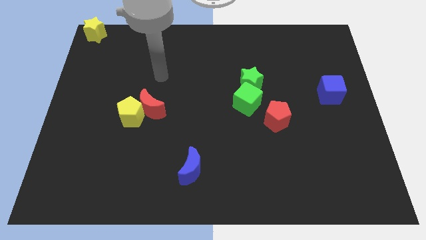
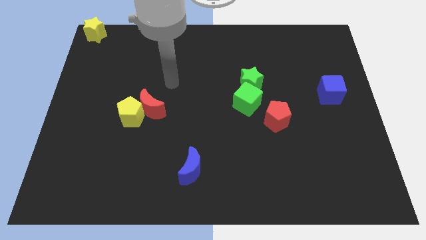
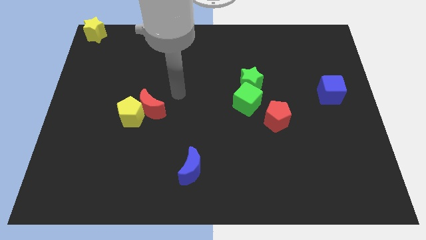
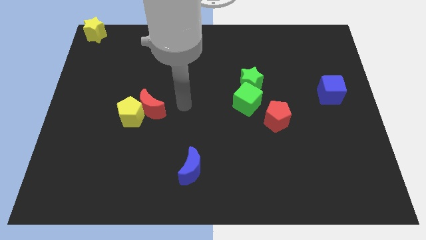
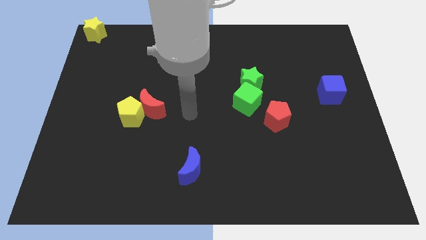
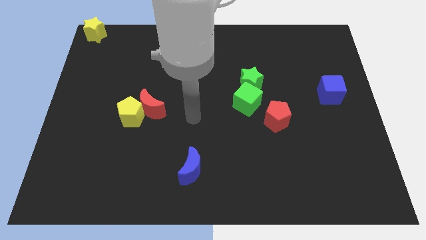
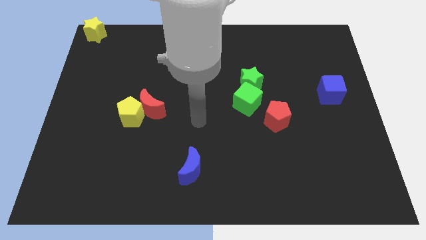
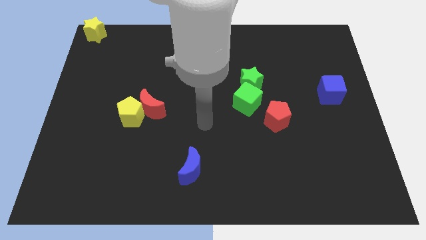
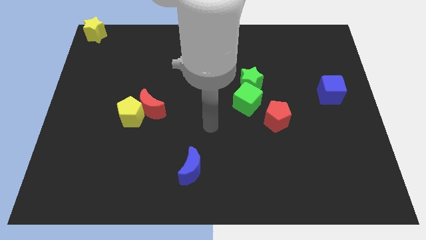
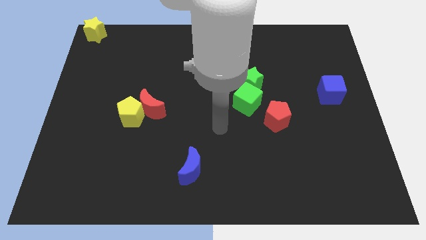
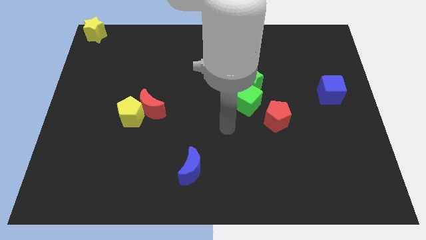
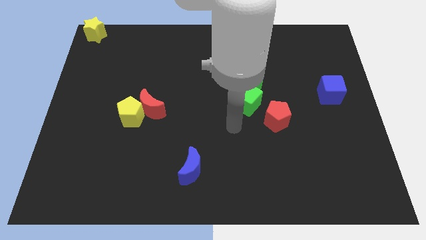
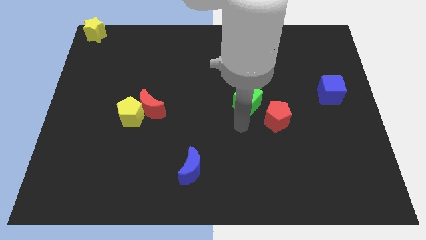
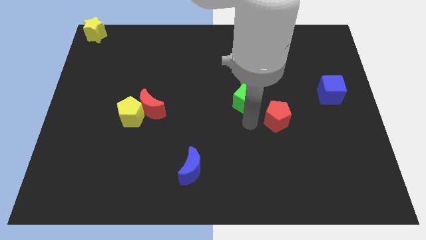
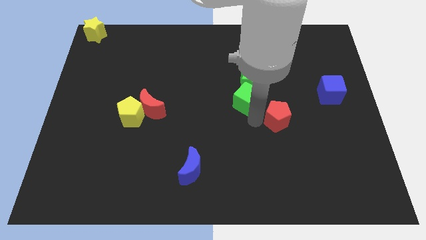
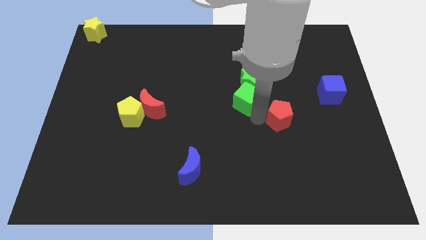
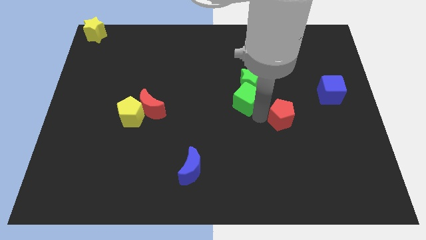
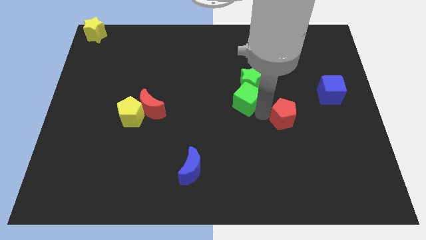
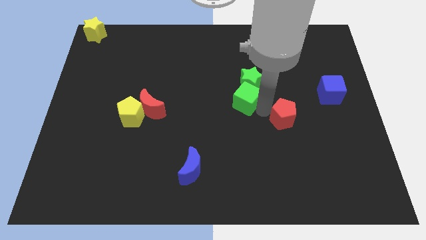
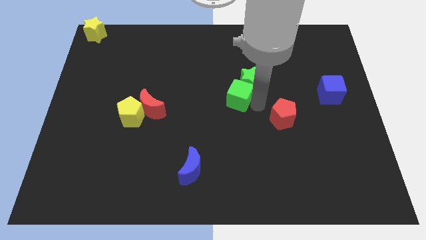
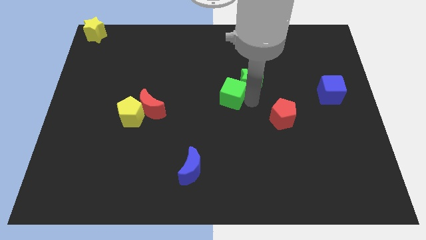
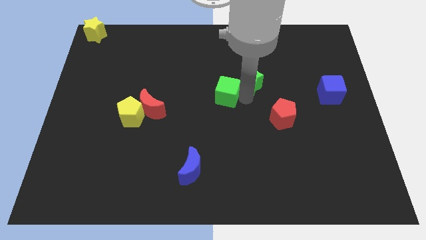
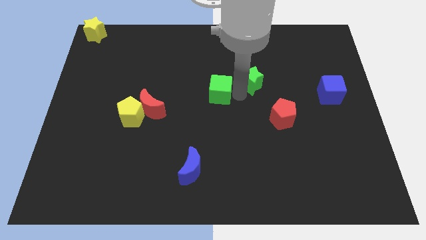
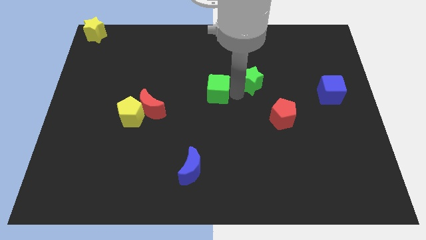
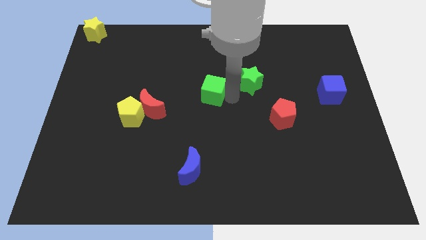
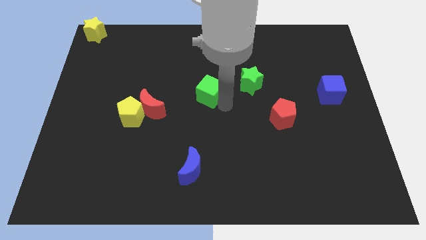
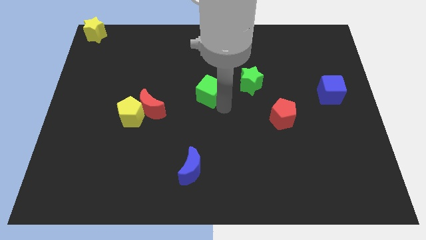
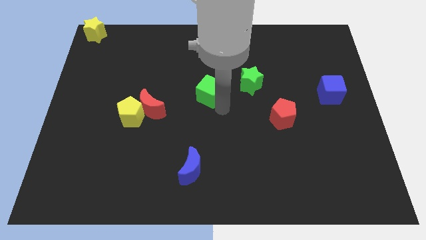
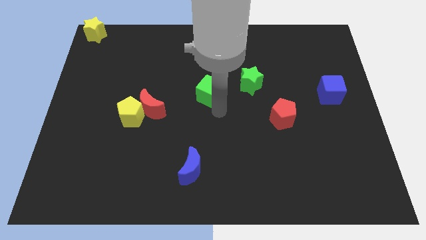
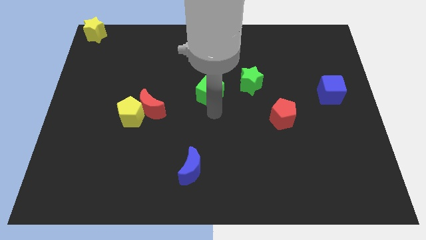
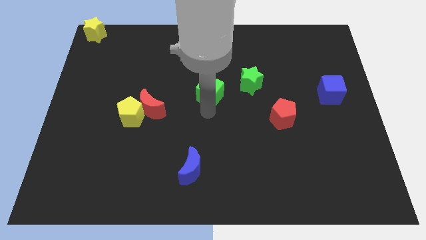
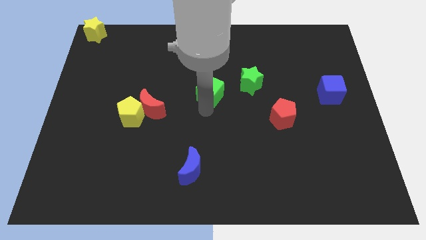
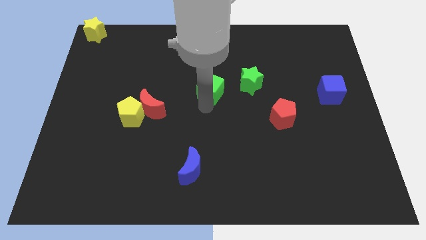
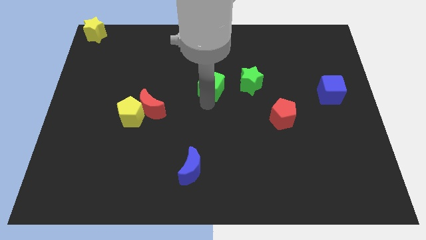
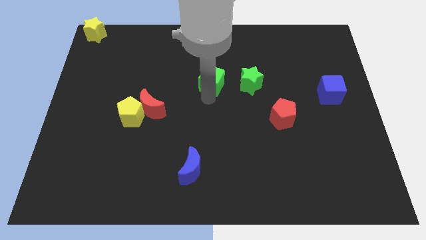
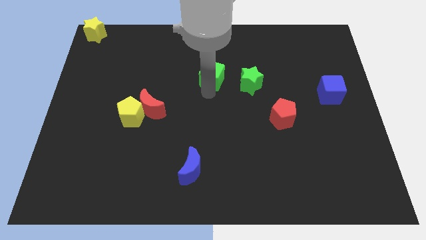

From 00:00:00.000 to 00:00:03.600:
push the green cube towards upward

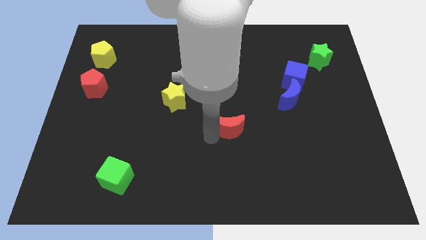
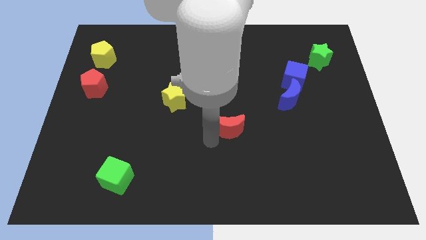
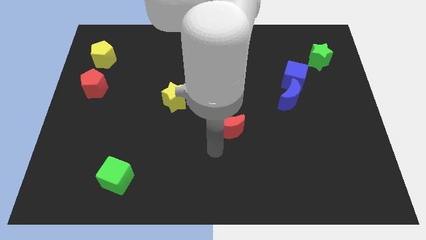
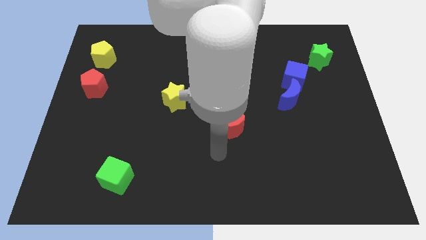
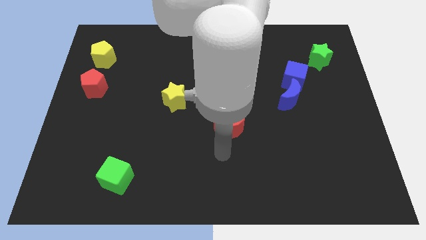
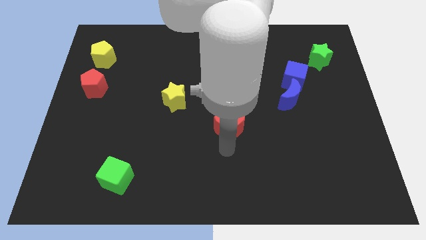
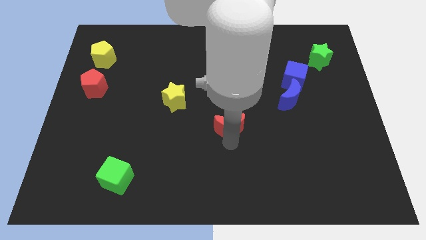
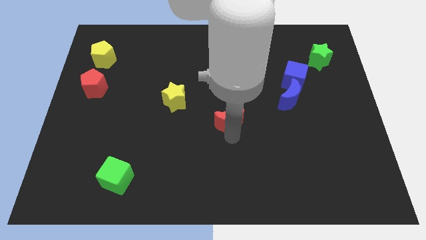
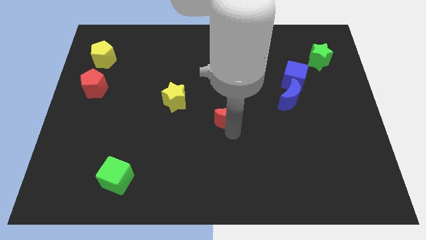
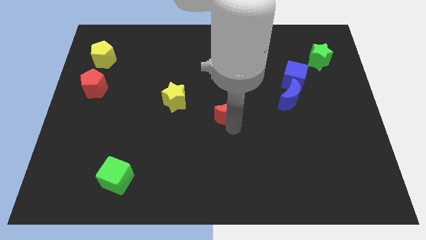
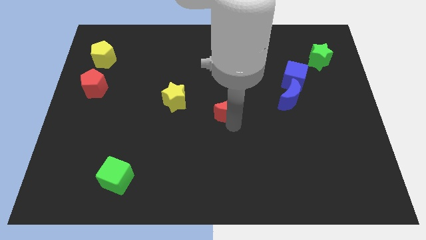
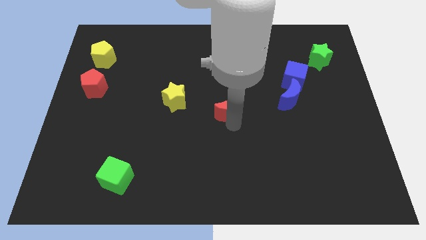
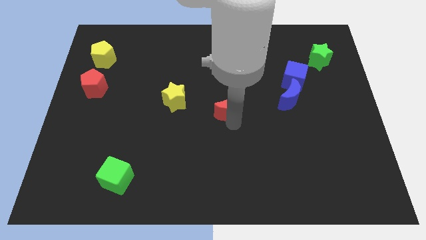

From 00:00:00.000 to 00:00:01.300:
move the red moon towards the right of the yellow star

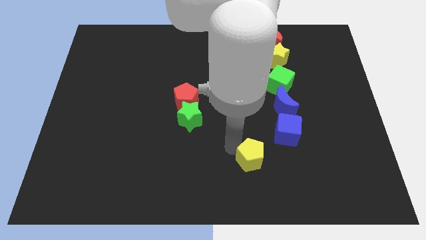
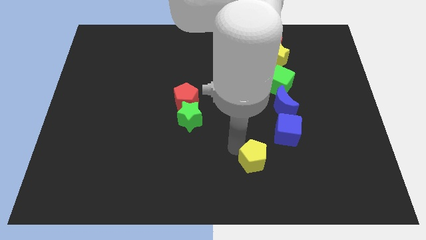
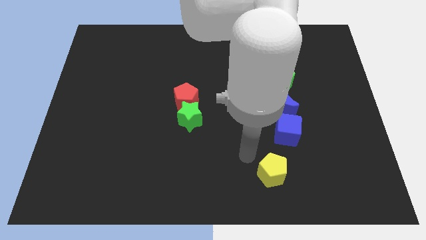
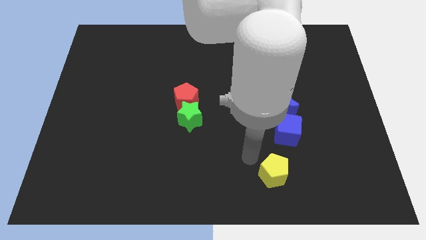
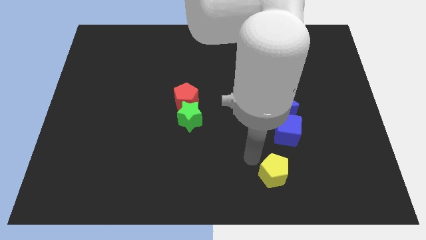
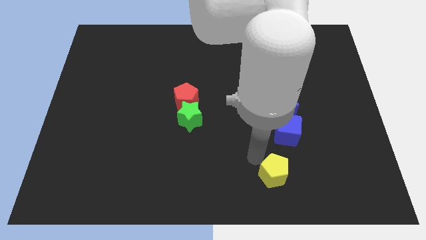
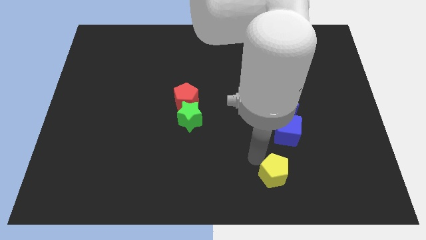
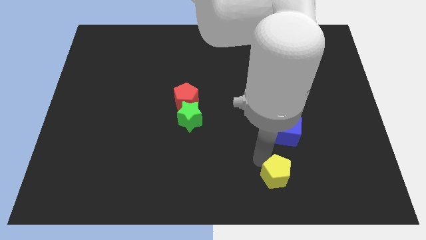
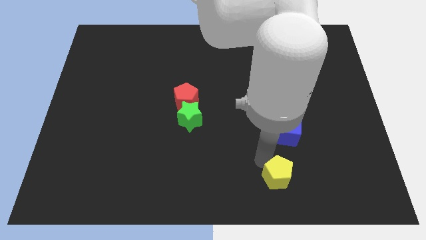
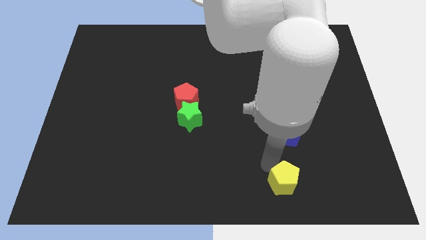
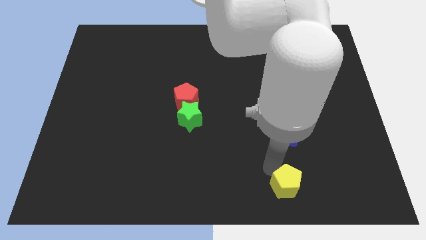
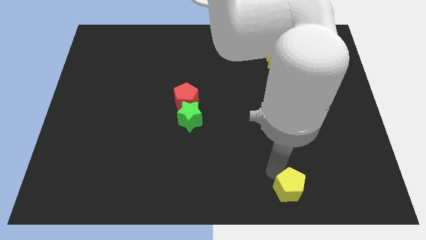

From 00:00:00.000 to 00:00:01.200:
move the yellow pentagon to the bottom of the board

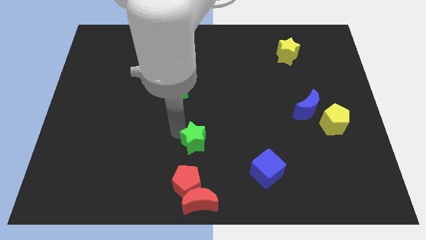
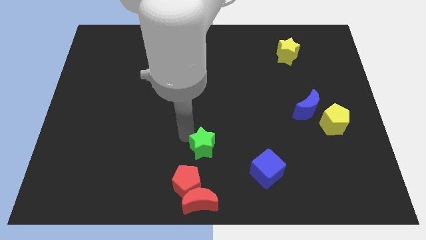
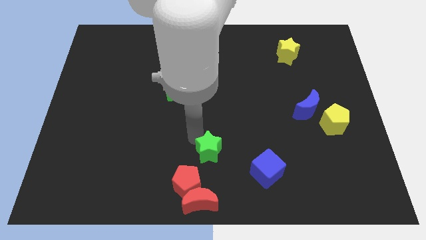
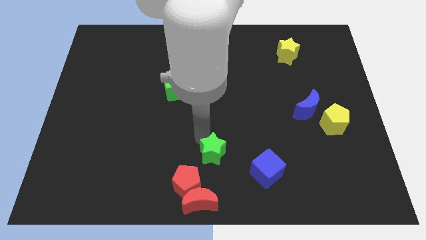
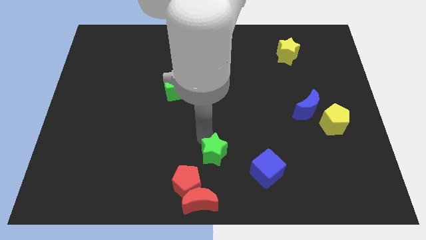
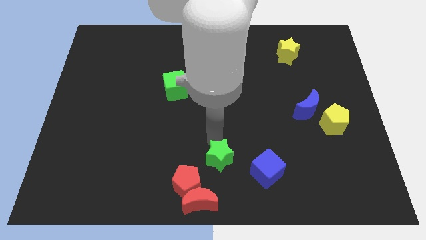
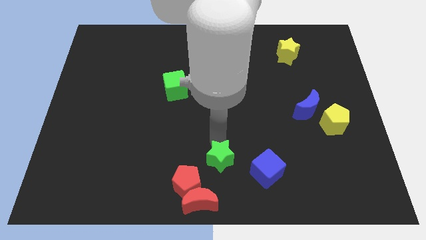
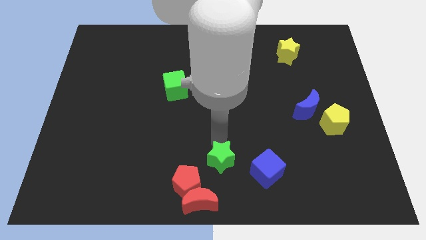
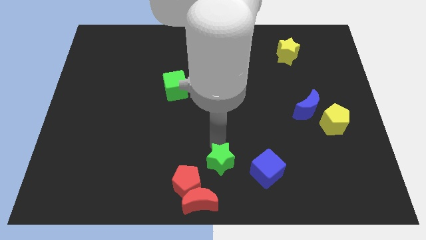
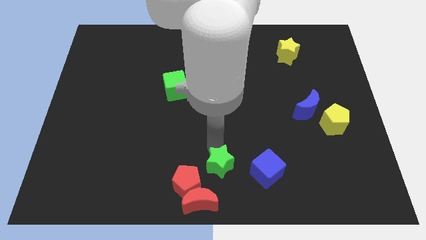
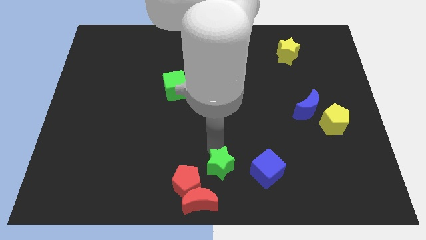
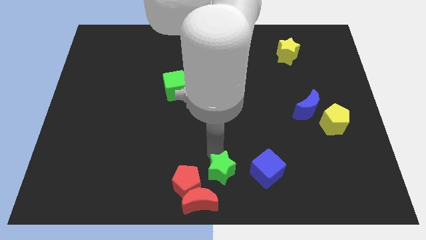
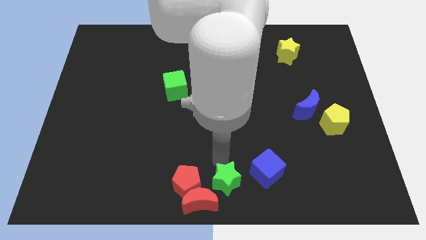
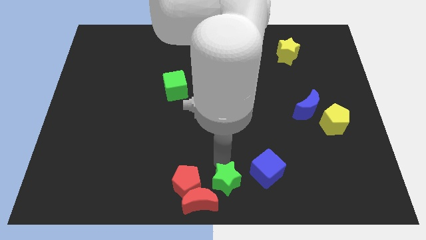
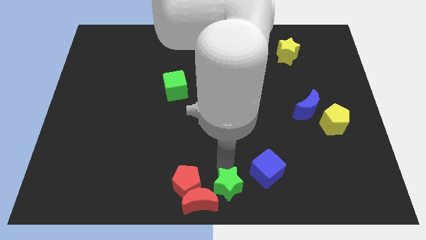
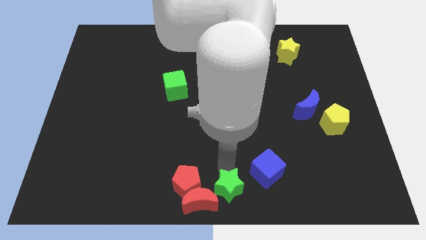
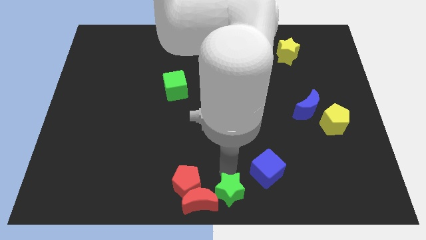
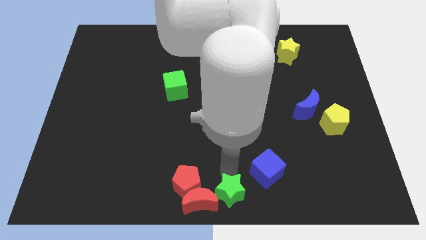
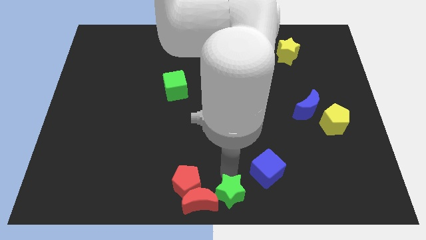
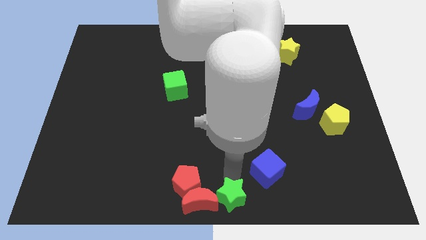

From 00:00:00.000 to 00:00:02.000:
place the green star at right side of the red crescent

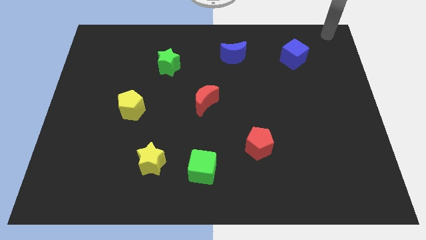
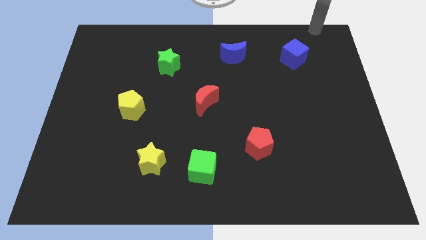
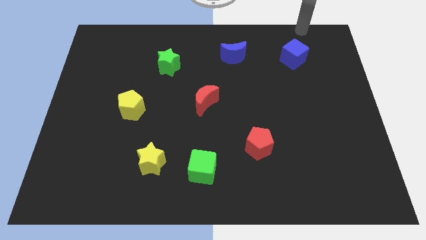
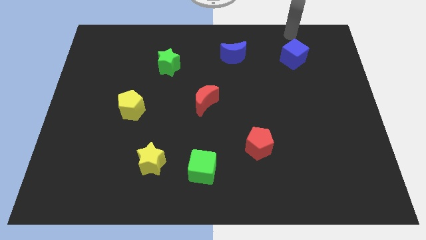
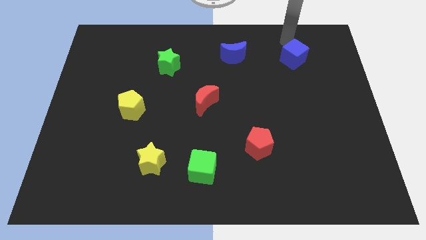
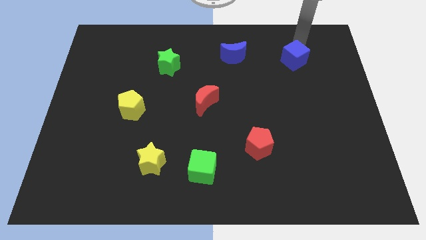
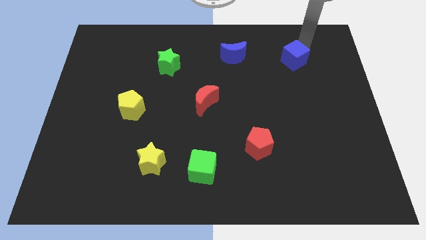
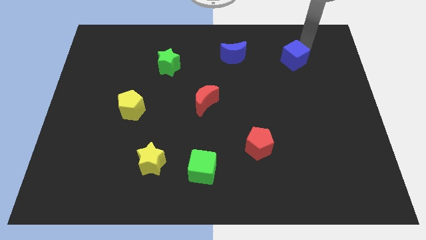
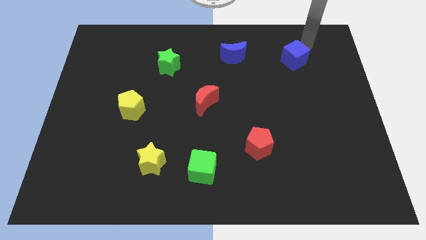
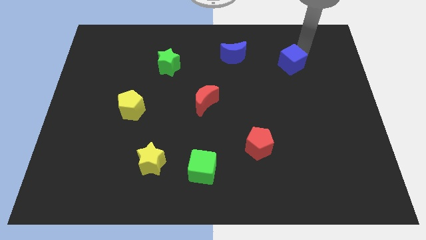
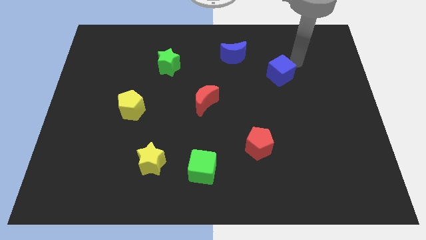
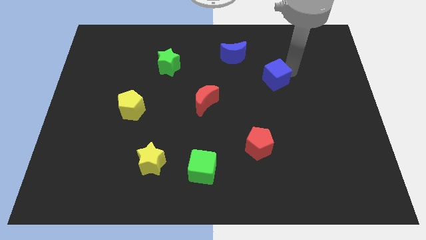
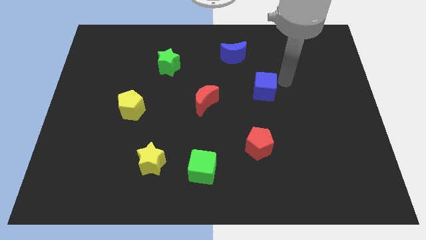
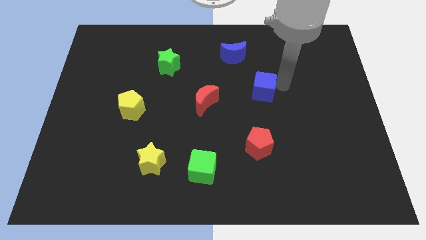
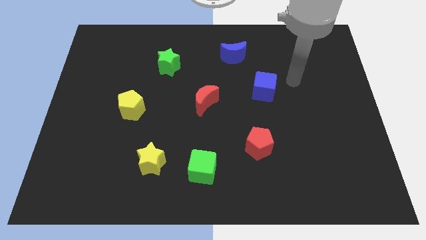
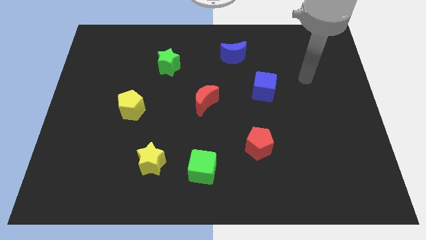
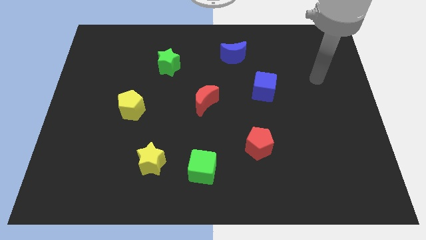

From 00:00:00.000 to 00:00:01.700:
place blue cube above red pentagon
